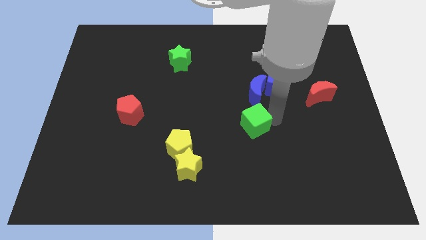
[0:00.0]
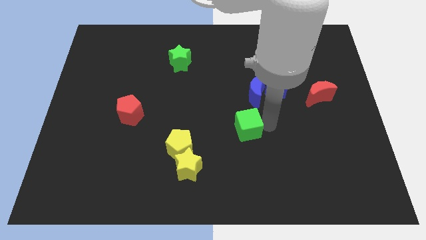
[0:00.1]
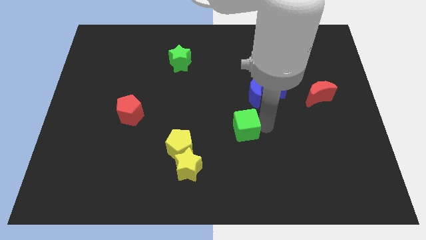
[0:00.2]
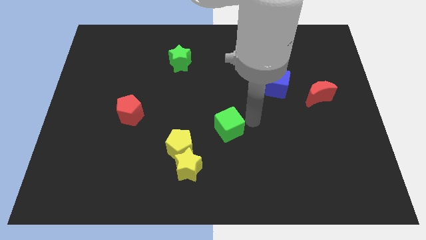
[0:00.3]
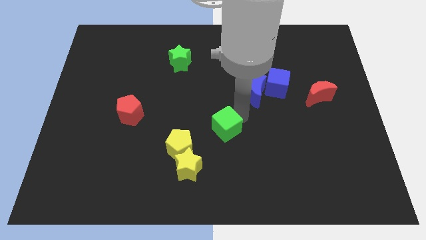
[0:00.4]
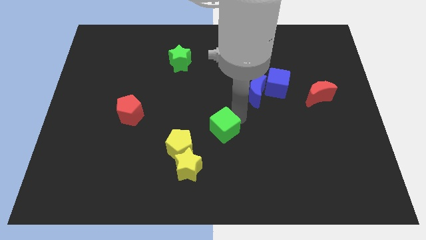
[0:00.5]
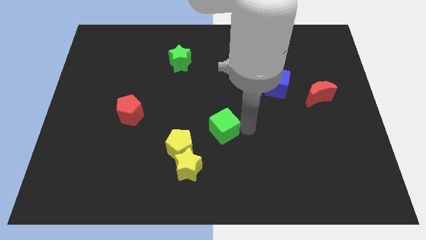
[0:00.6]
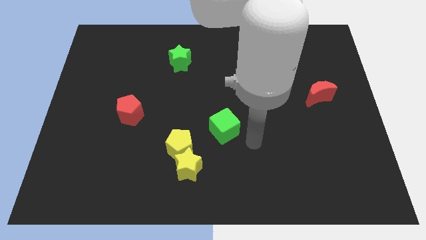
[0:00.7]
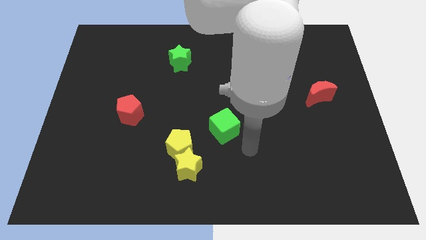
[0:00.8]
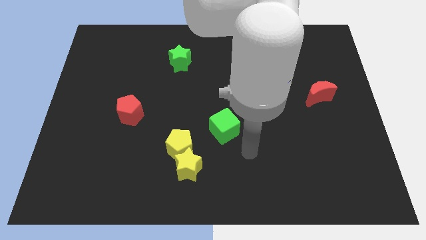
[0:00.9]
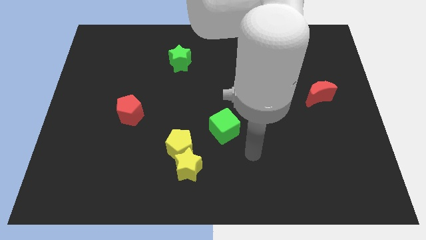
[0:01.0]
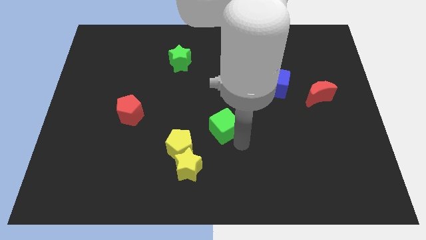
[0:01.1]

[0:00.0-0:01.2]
place green cube to the center of the board

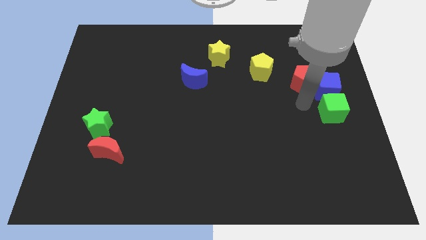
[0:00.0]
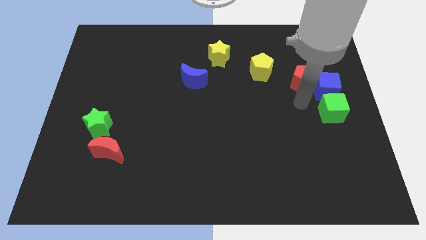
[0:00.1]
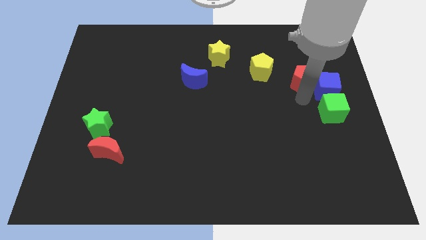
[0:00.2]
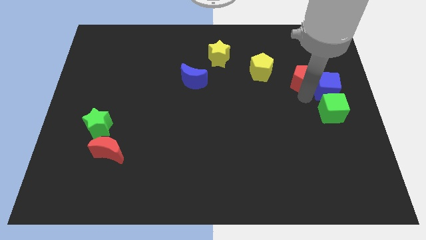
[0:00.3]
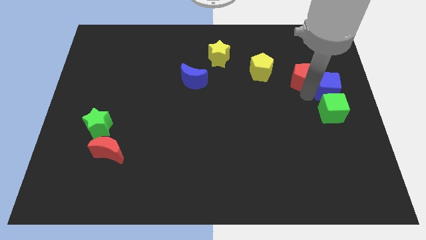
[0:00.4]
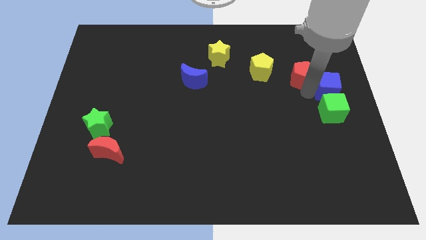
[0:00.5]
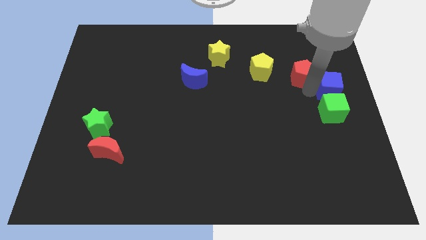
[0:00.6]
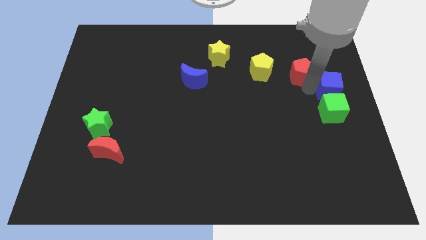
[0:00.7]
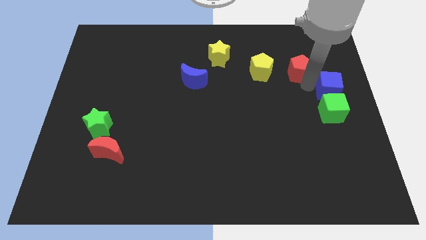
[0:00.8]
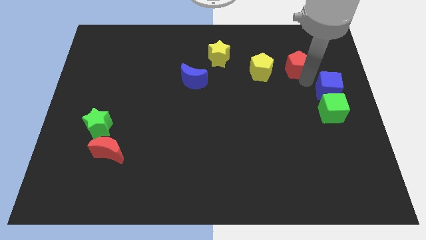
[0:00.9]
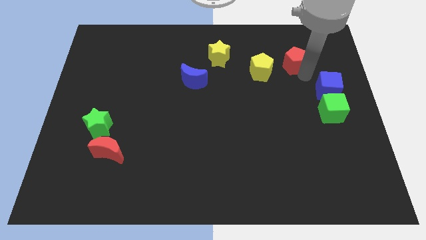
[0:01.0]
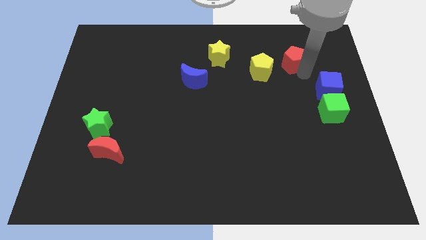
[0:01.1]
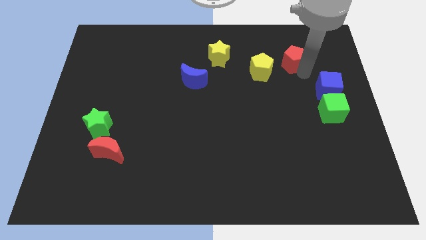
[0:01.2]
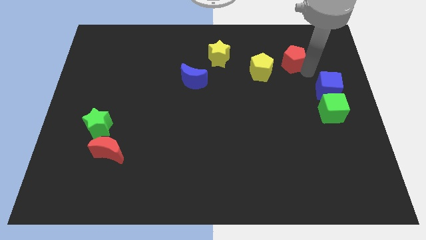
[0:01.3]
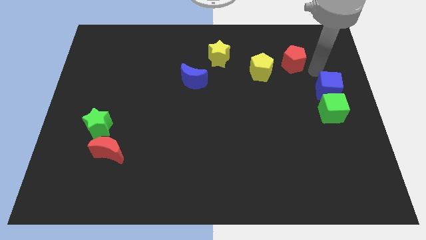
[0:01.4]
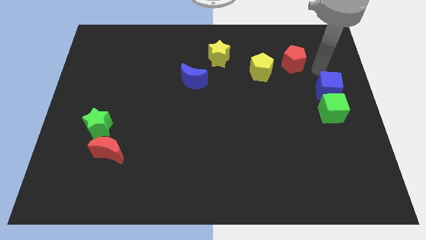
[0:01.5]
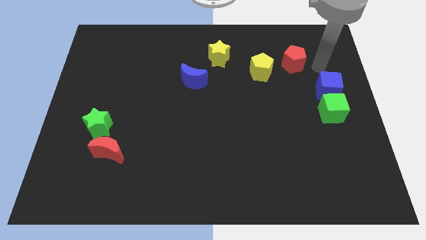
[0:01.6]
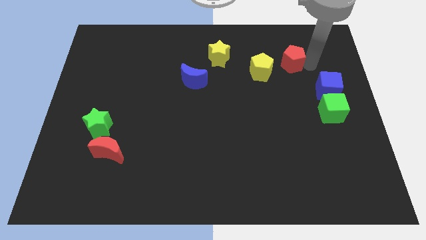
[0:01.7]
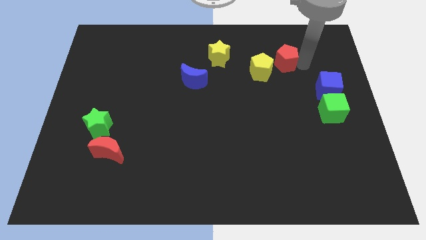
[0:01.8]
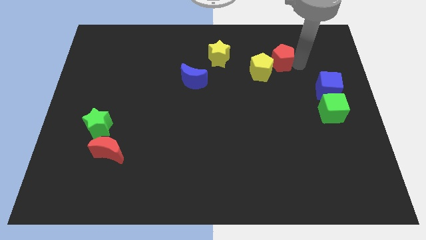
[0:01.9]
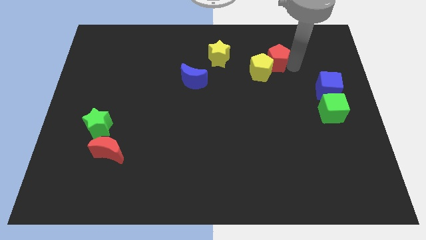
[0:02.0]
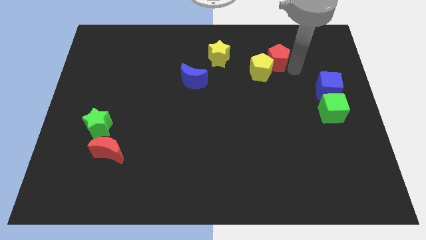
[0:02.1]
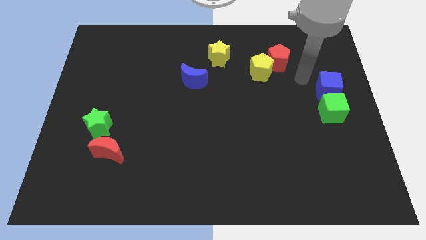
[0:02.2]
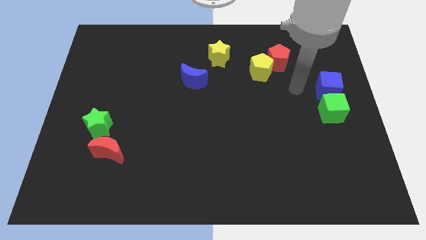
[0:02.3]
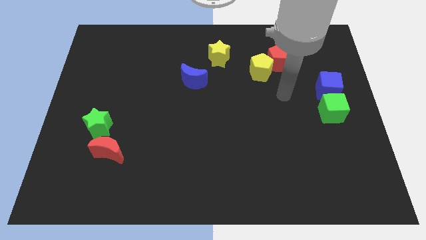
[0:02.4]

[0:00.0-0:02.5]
move the red pentagon into yellow pentagon

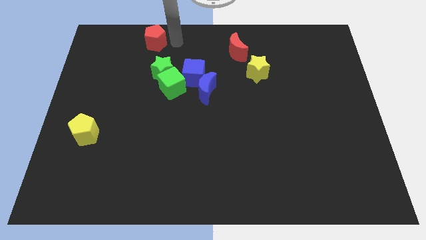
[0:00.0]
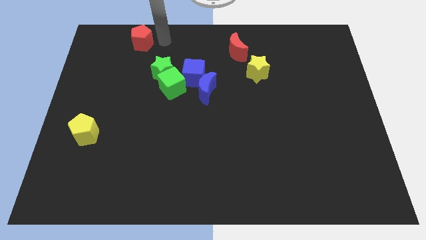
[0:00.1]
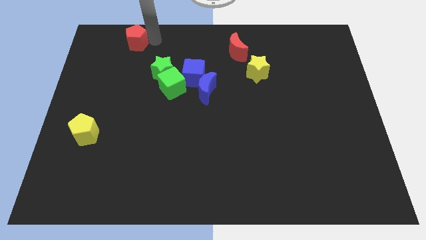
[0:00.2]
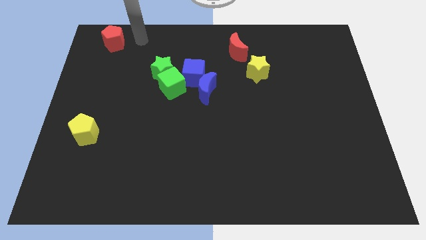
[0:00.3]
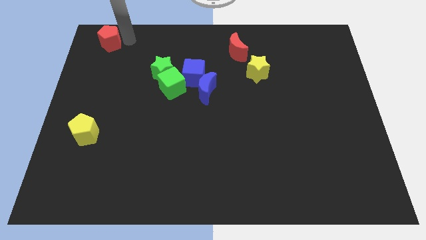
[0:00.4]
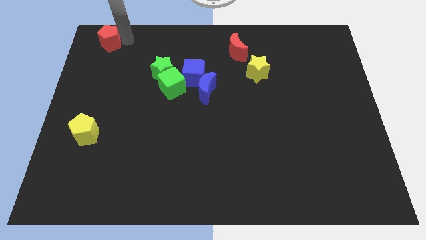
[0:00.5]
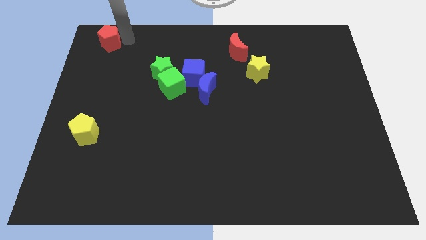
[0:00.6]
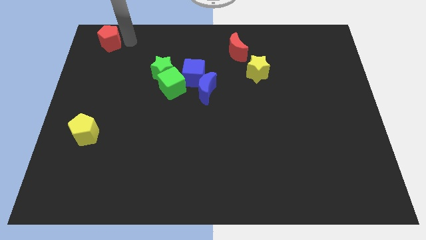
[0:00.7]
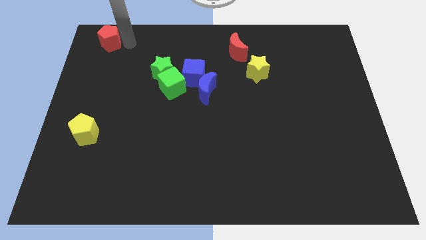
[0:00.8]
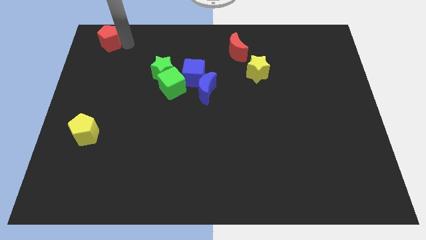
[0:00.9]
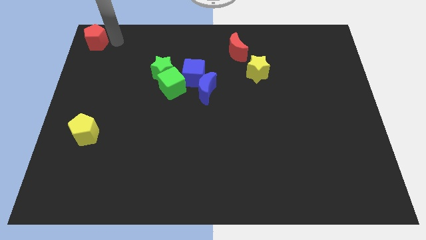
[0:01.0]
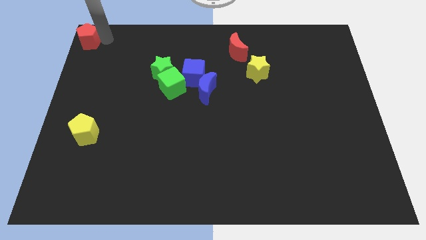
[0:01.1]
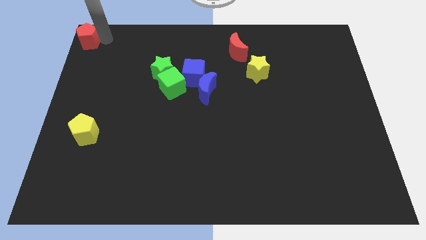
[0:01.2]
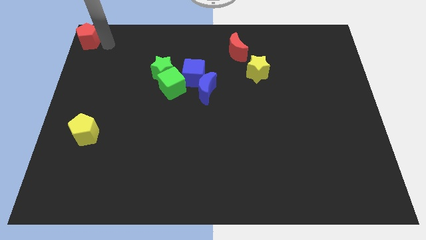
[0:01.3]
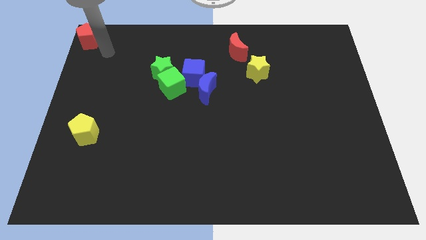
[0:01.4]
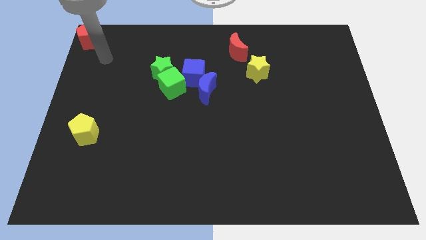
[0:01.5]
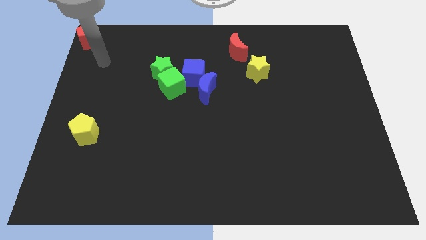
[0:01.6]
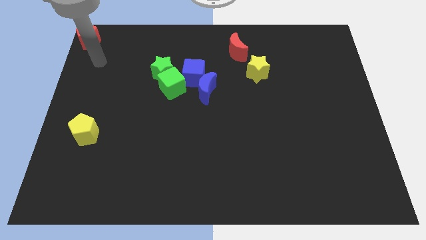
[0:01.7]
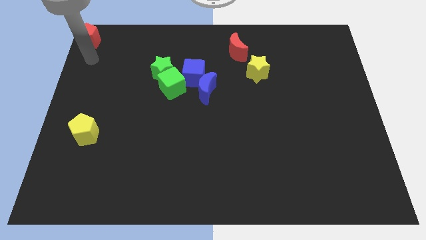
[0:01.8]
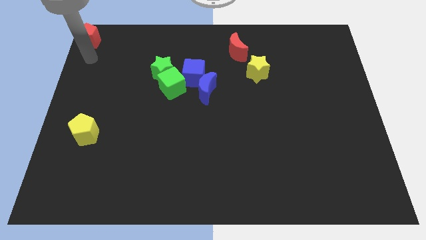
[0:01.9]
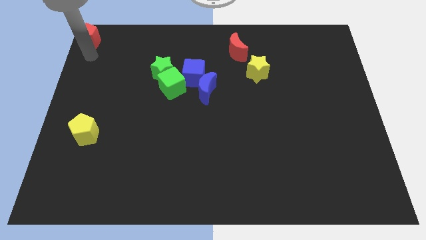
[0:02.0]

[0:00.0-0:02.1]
push red pentagon to the top left corner

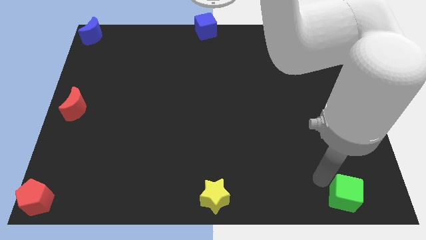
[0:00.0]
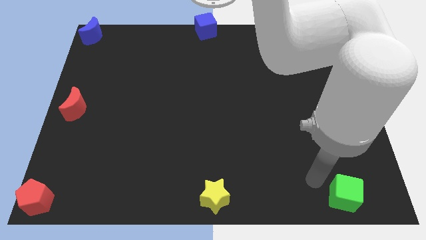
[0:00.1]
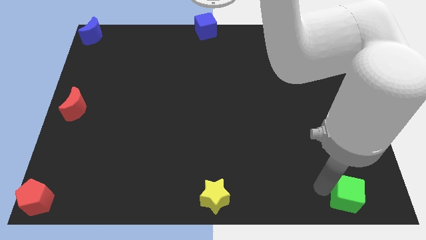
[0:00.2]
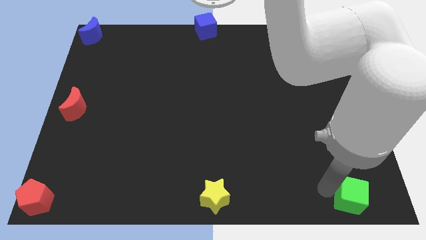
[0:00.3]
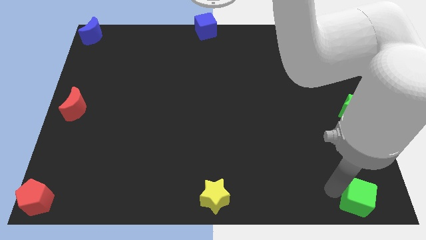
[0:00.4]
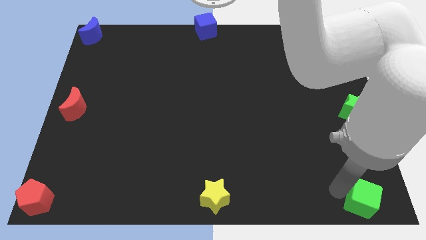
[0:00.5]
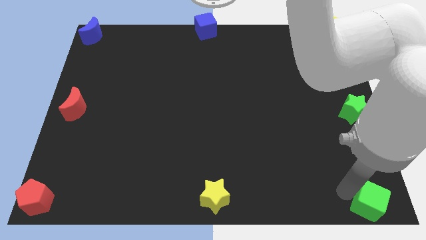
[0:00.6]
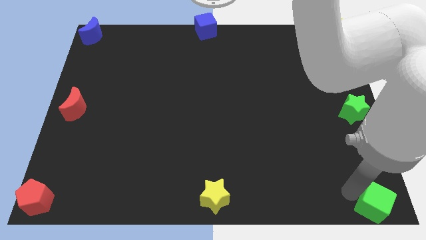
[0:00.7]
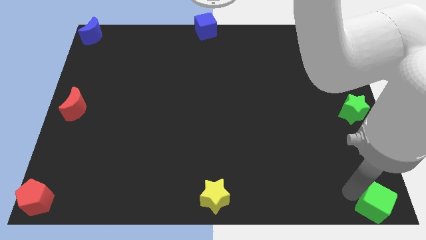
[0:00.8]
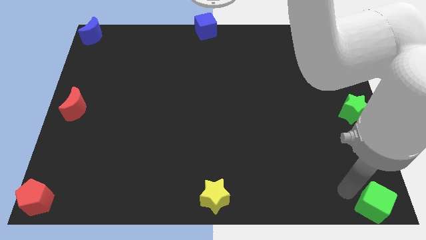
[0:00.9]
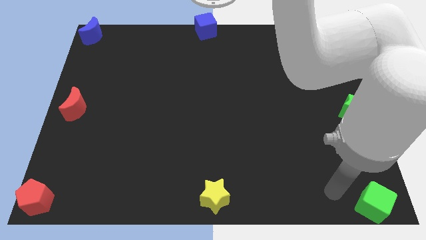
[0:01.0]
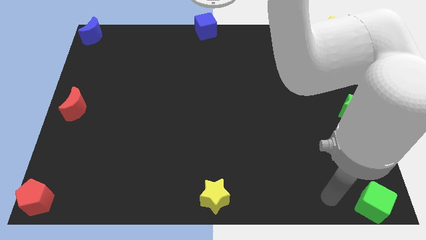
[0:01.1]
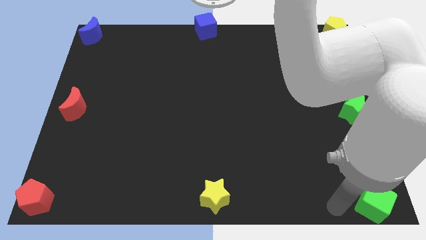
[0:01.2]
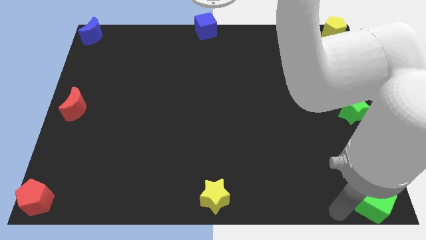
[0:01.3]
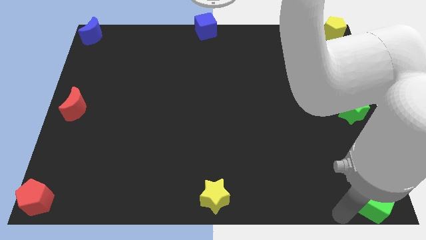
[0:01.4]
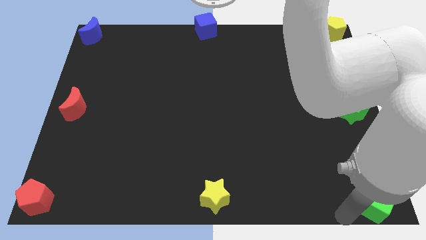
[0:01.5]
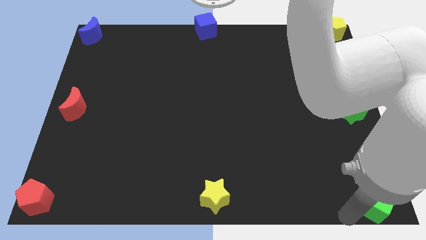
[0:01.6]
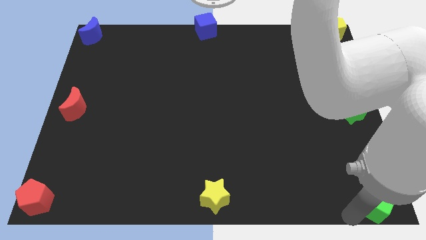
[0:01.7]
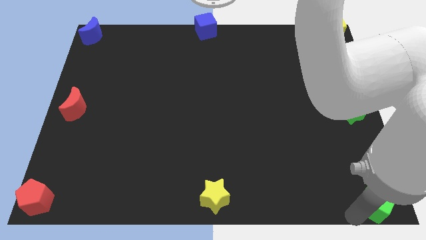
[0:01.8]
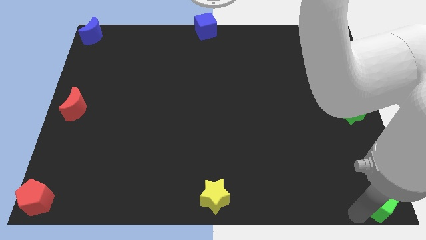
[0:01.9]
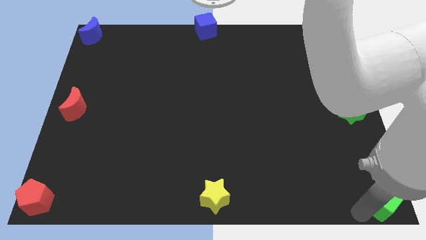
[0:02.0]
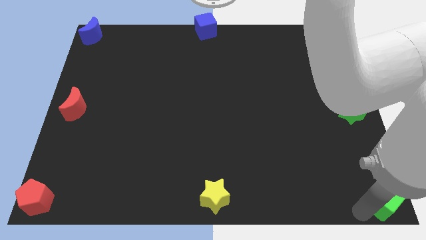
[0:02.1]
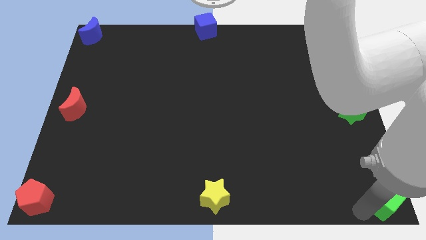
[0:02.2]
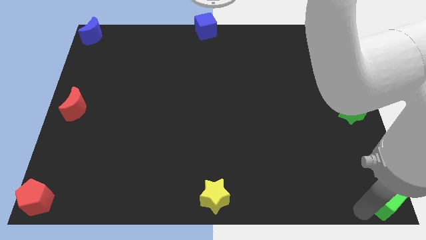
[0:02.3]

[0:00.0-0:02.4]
move the green cube to the bottom right corner of the board

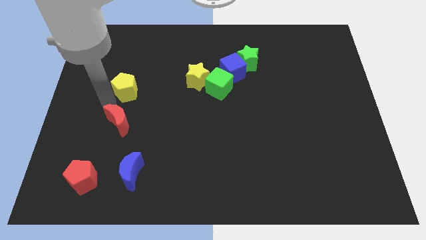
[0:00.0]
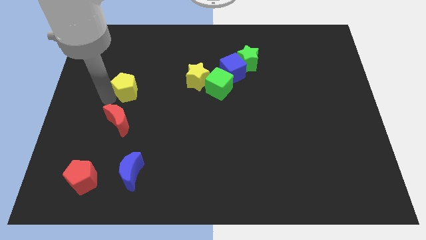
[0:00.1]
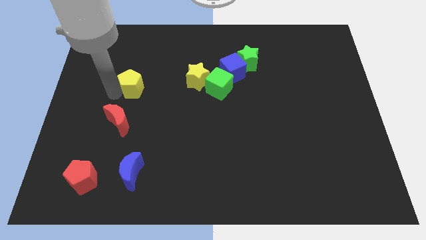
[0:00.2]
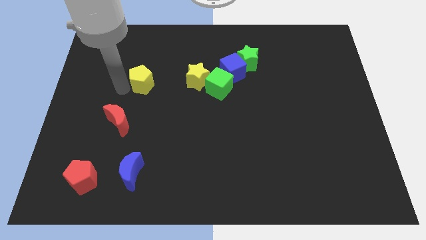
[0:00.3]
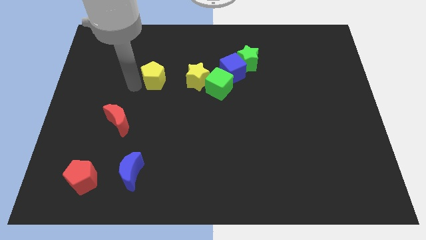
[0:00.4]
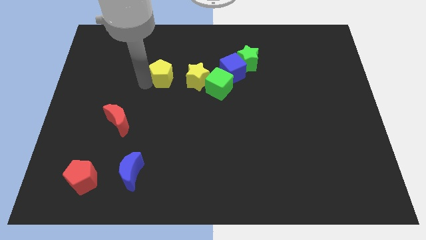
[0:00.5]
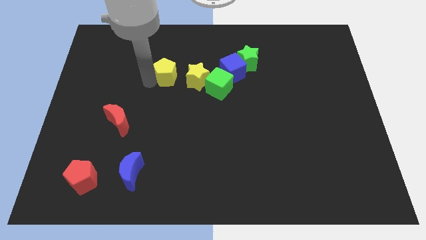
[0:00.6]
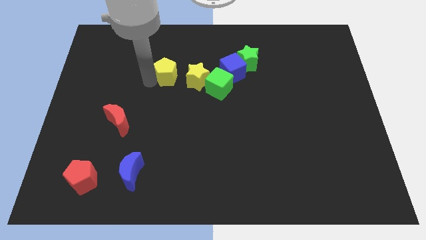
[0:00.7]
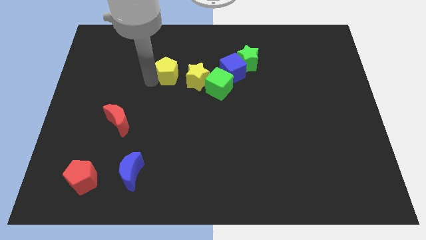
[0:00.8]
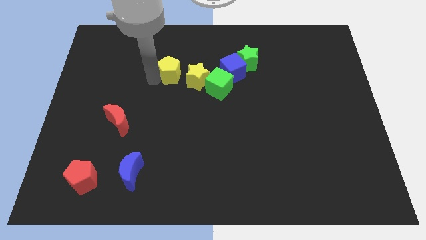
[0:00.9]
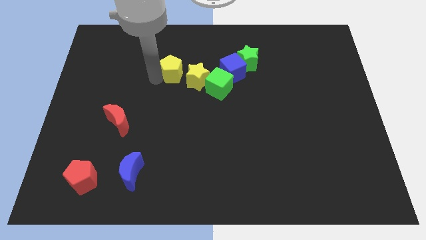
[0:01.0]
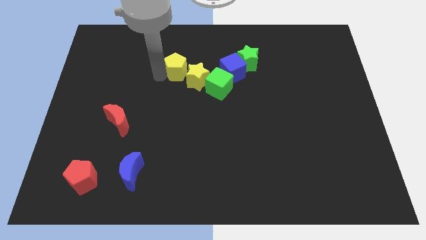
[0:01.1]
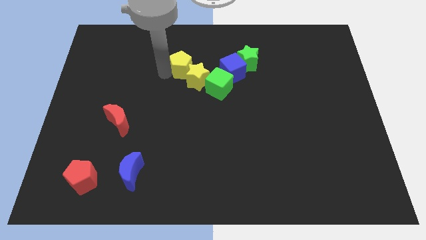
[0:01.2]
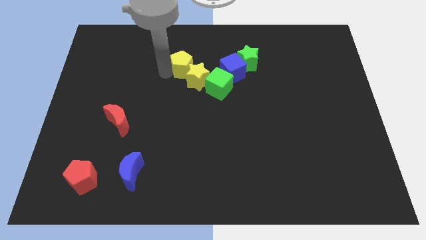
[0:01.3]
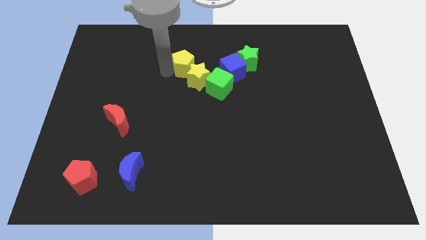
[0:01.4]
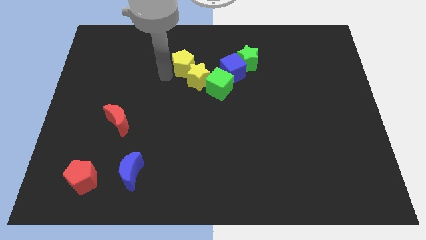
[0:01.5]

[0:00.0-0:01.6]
move the yellow pentagon to the top side of the yellow star
